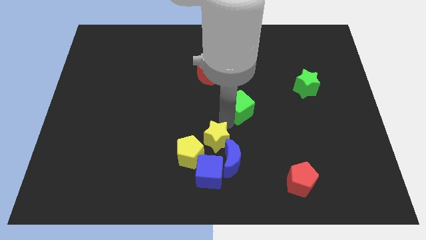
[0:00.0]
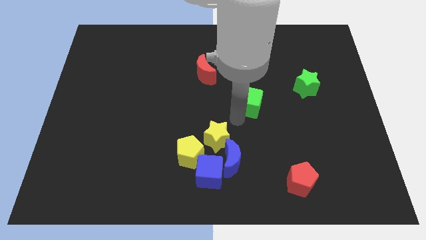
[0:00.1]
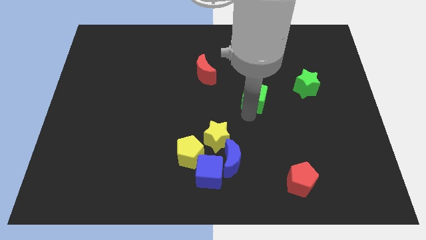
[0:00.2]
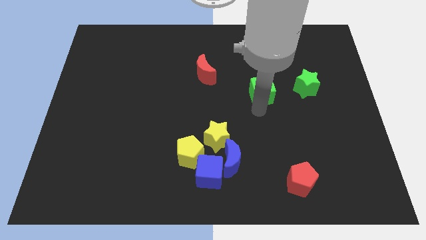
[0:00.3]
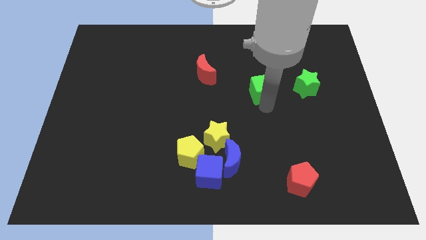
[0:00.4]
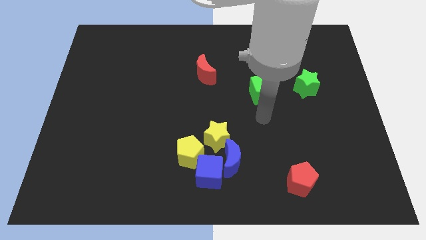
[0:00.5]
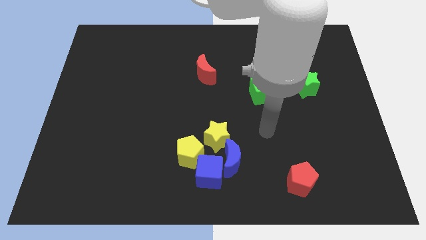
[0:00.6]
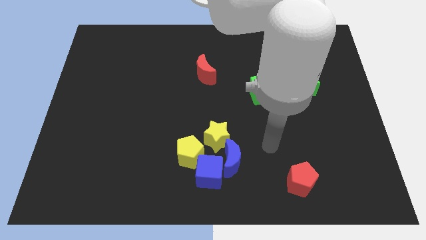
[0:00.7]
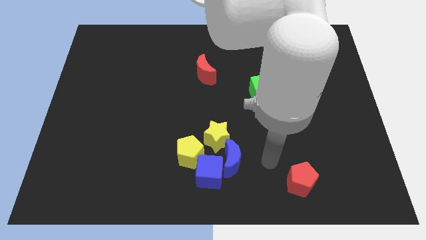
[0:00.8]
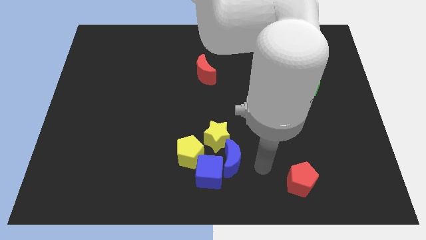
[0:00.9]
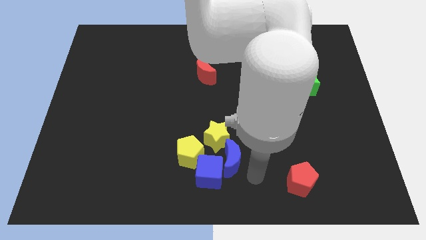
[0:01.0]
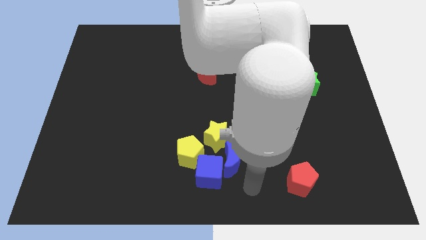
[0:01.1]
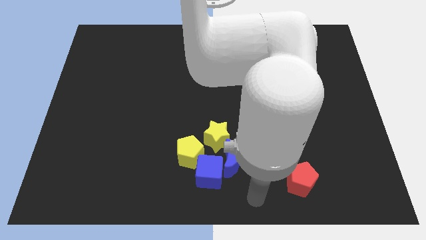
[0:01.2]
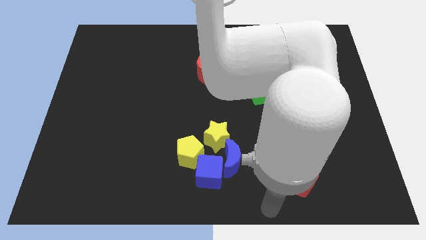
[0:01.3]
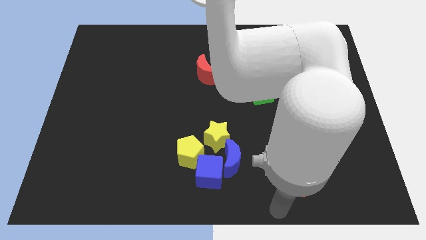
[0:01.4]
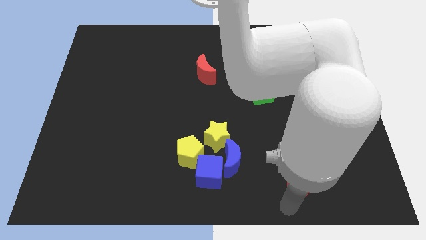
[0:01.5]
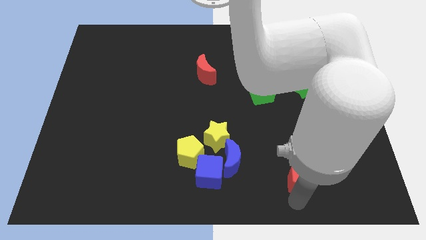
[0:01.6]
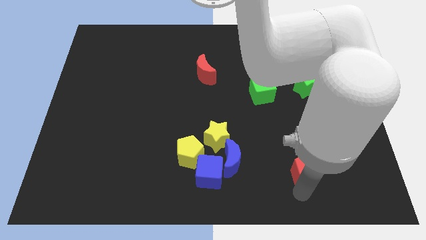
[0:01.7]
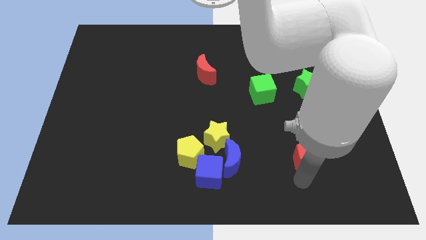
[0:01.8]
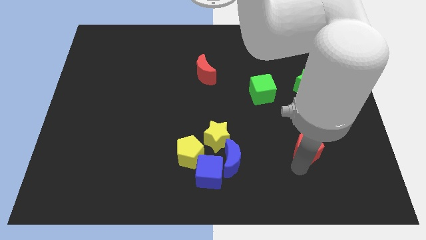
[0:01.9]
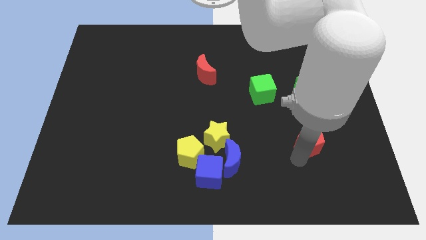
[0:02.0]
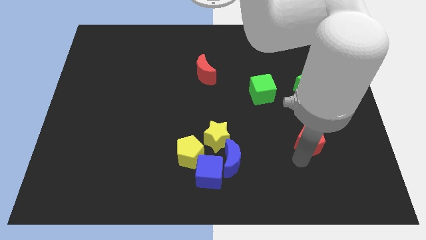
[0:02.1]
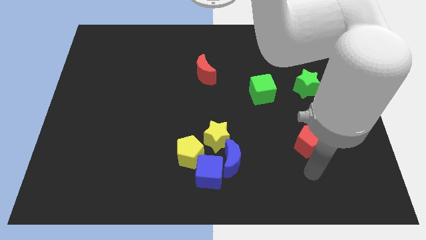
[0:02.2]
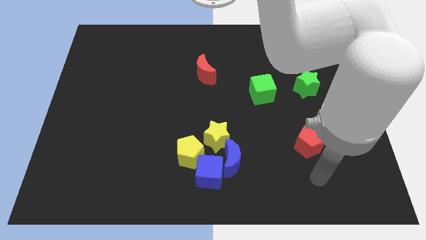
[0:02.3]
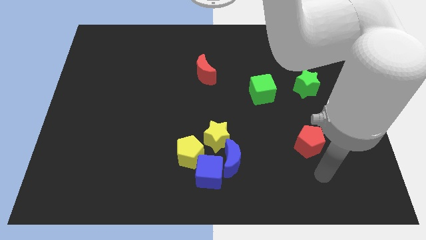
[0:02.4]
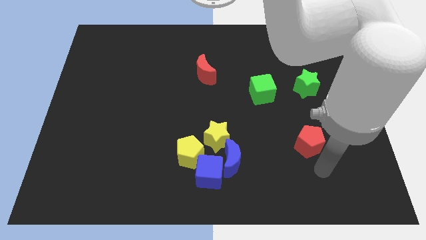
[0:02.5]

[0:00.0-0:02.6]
place the red pentagon below the green star

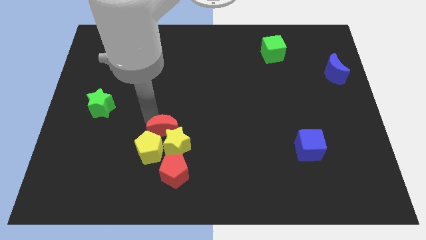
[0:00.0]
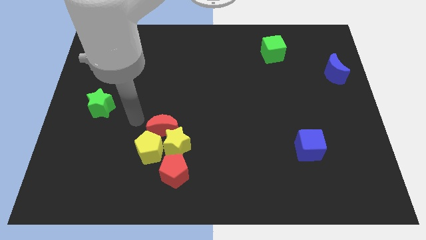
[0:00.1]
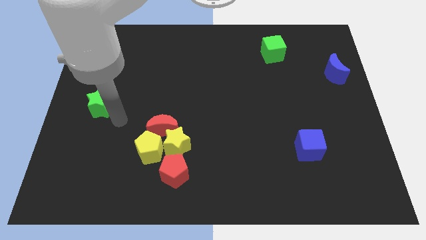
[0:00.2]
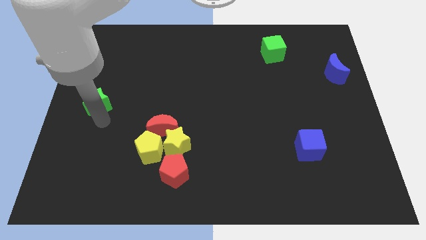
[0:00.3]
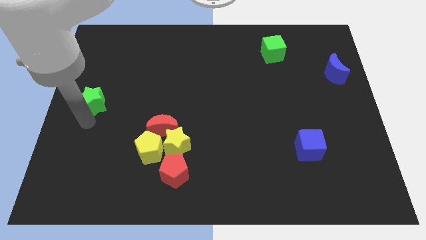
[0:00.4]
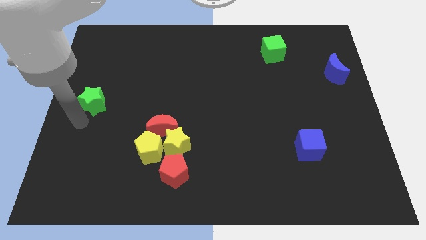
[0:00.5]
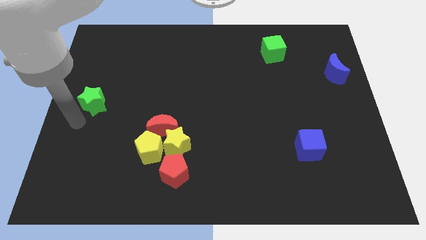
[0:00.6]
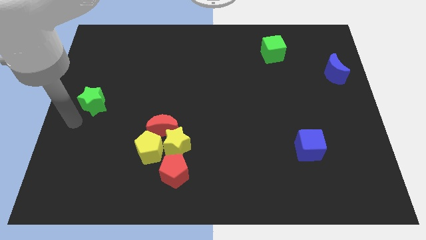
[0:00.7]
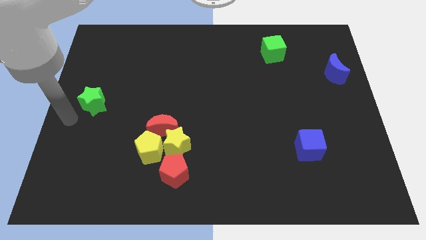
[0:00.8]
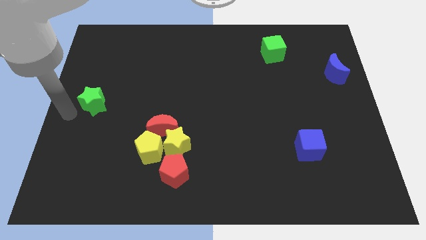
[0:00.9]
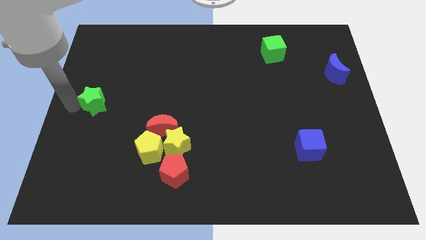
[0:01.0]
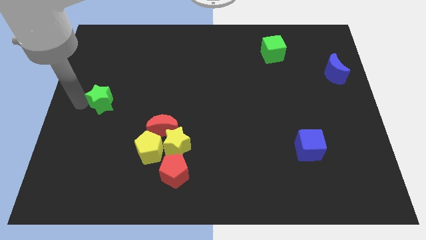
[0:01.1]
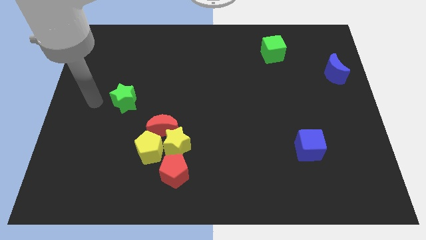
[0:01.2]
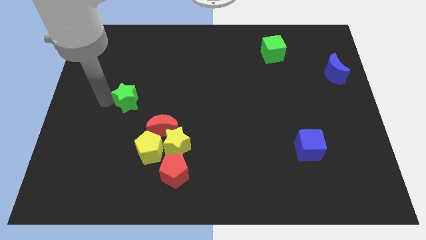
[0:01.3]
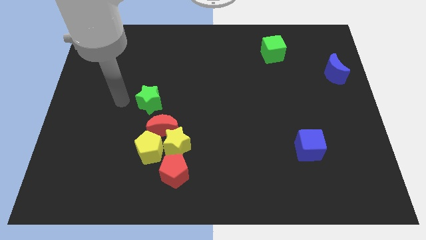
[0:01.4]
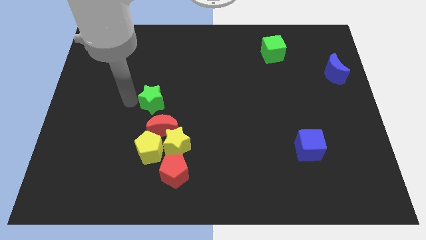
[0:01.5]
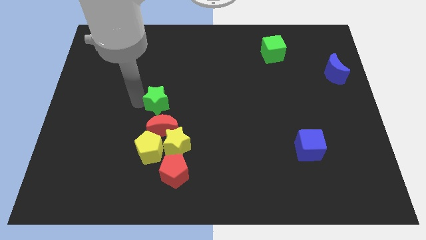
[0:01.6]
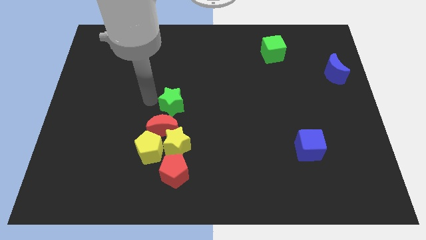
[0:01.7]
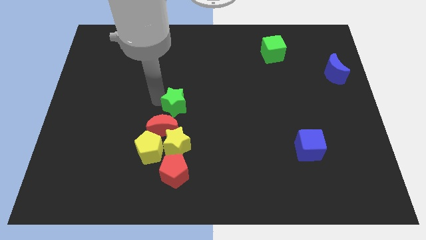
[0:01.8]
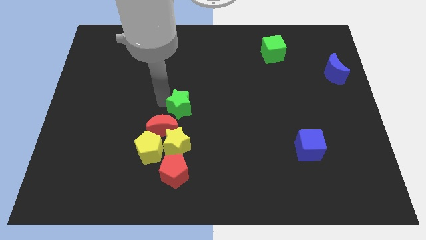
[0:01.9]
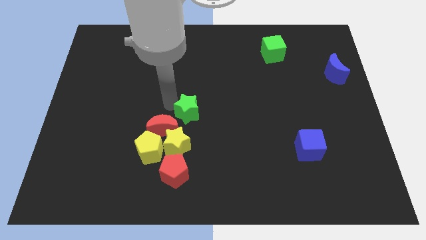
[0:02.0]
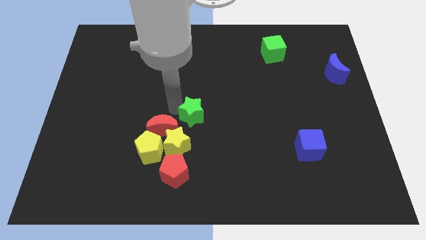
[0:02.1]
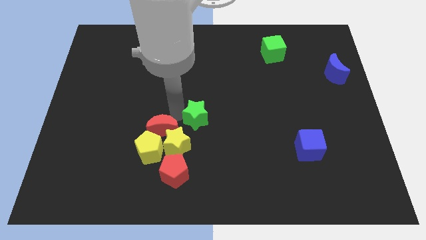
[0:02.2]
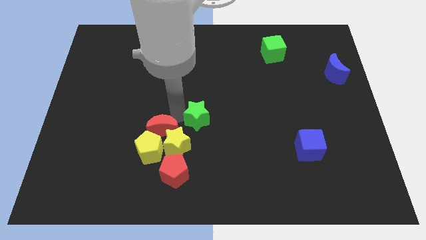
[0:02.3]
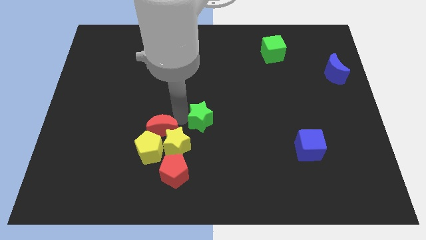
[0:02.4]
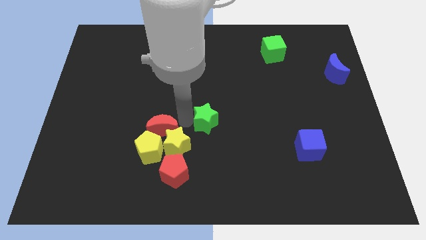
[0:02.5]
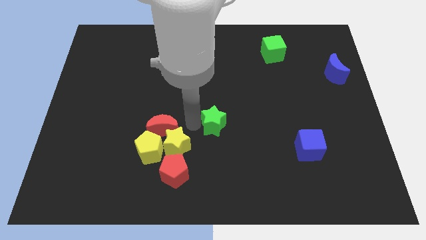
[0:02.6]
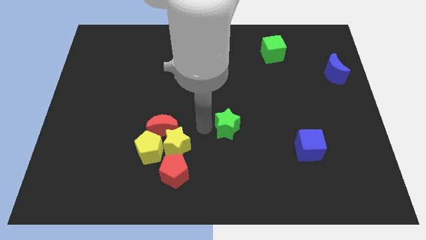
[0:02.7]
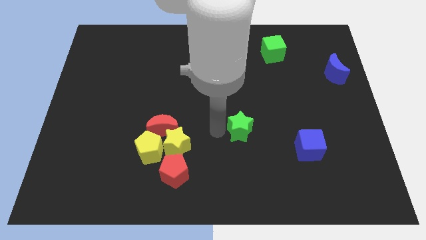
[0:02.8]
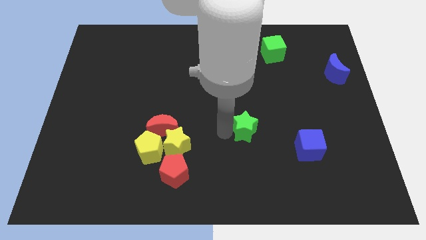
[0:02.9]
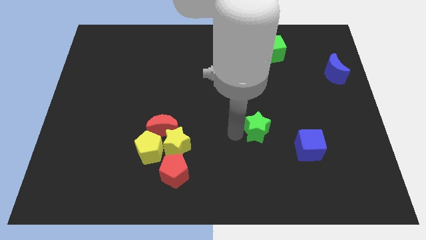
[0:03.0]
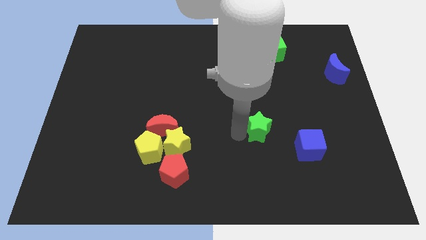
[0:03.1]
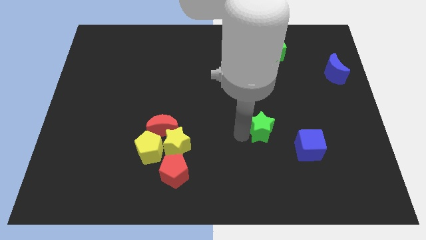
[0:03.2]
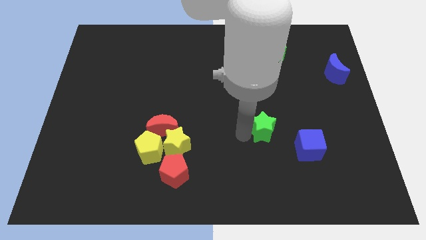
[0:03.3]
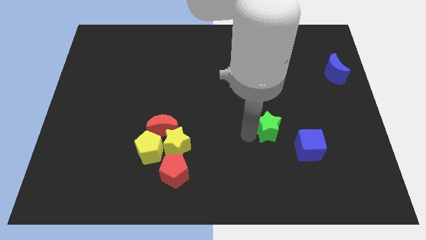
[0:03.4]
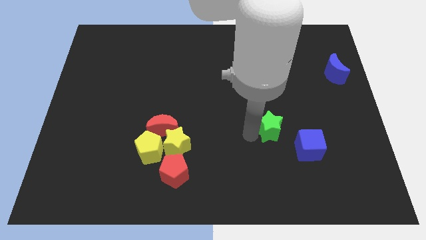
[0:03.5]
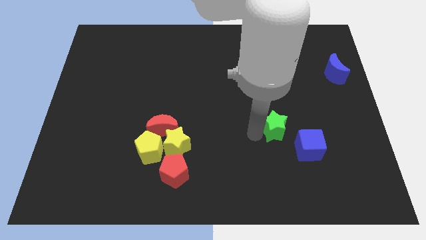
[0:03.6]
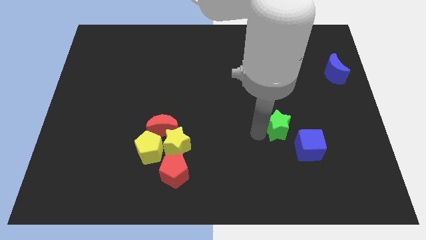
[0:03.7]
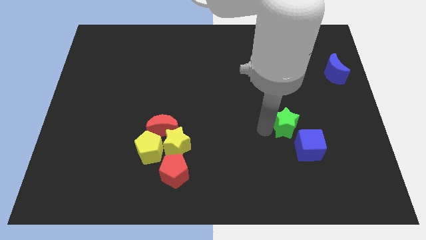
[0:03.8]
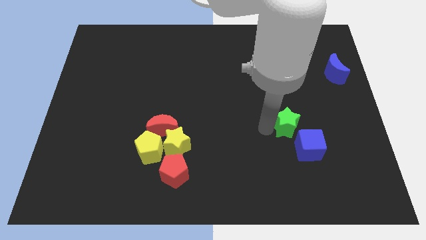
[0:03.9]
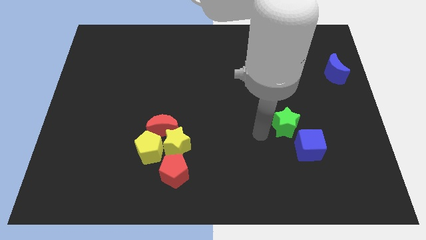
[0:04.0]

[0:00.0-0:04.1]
place the green star at the top left side of blue cube

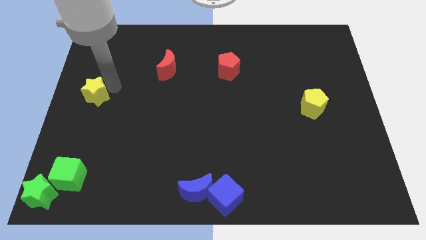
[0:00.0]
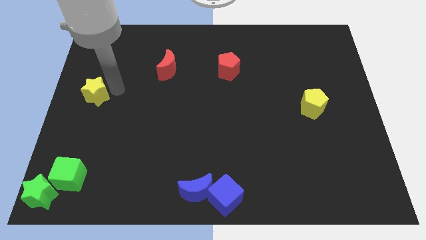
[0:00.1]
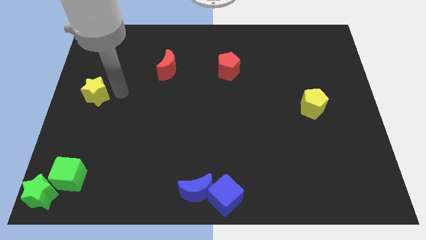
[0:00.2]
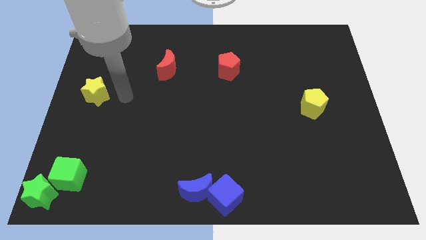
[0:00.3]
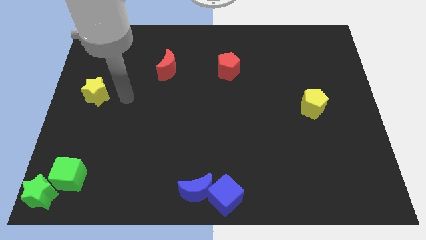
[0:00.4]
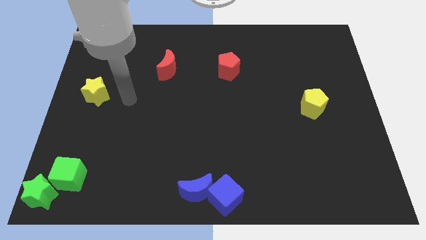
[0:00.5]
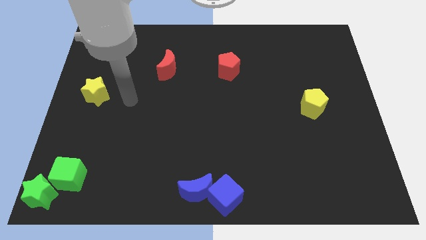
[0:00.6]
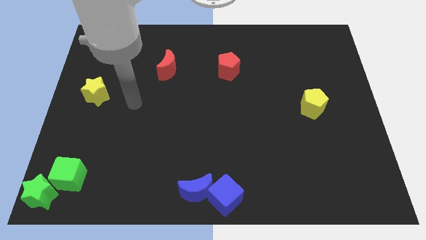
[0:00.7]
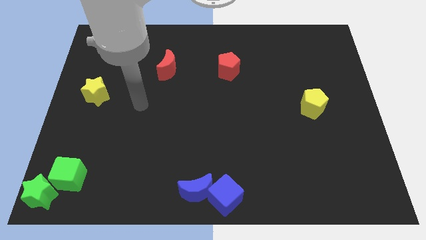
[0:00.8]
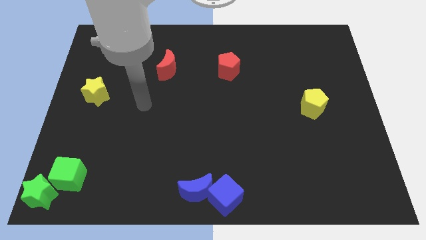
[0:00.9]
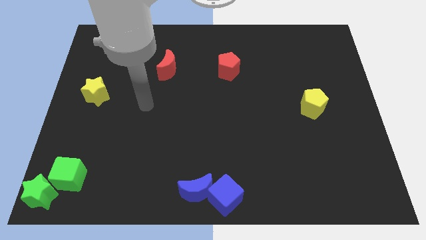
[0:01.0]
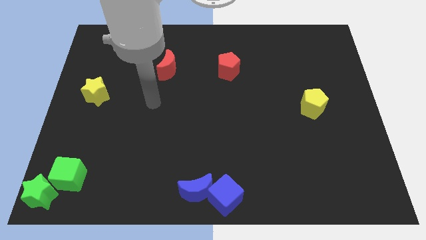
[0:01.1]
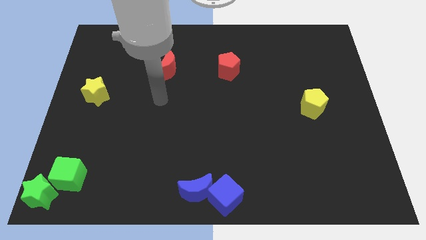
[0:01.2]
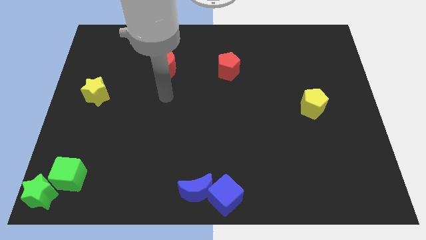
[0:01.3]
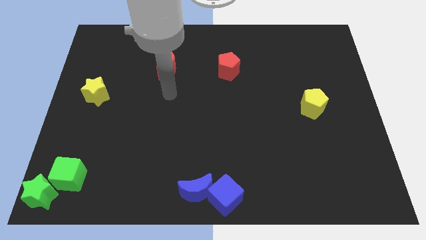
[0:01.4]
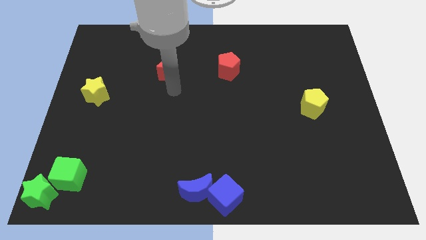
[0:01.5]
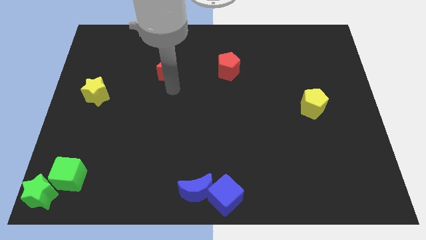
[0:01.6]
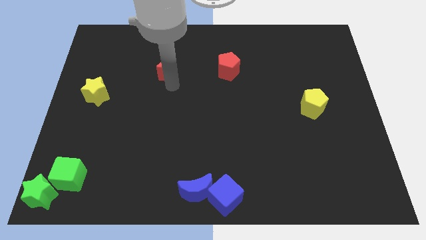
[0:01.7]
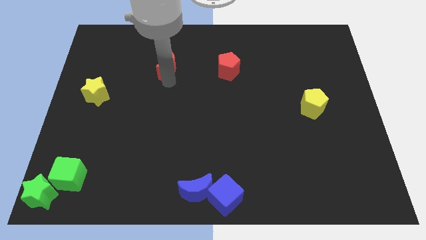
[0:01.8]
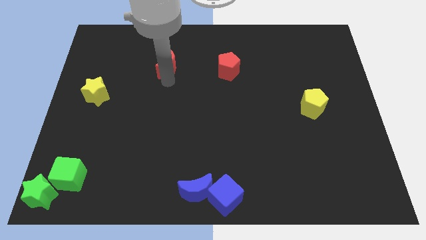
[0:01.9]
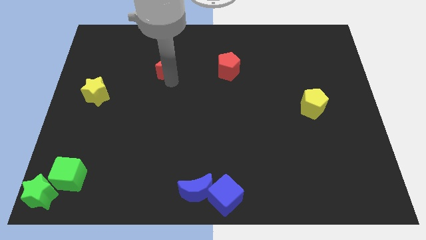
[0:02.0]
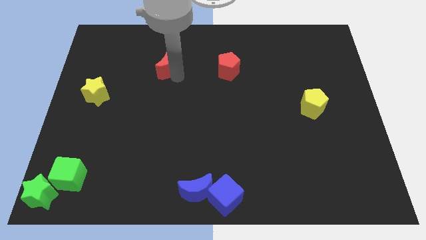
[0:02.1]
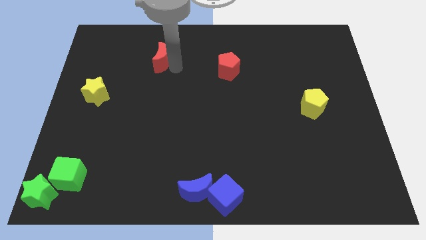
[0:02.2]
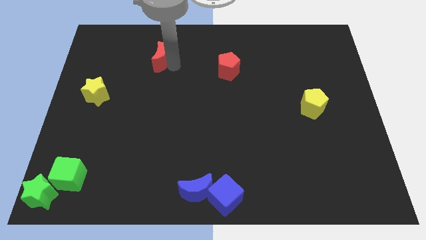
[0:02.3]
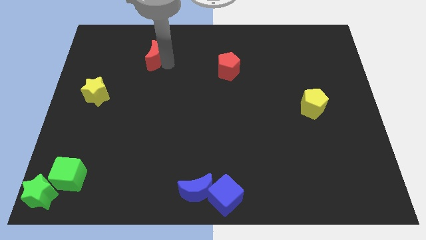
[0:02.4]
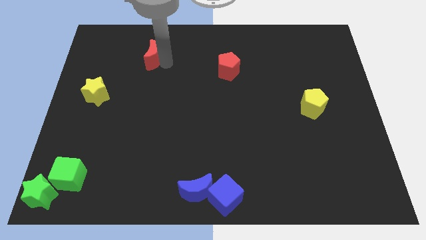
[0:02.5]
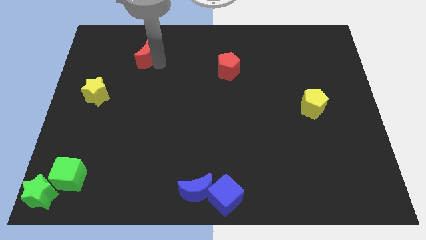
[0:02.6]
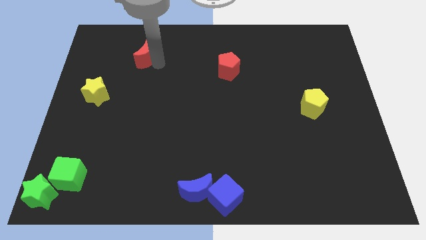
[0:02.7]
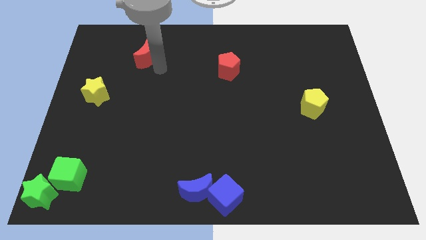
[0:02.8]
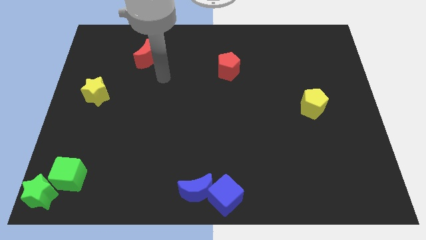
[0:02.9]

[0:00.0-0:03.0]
slightly move the red moon diagonal above the yellow star
